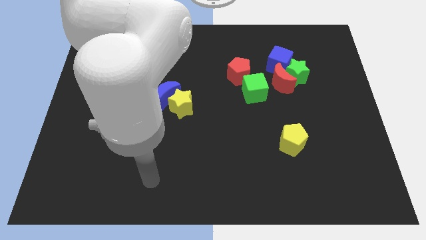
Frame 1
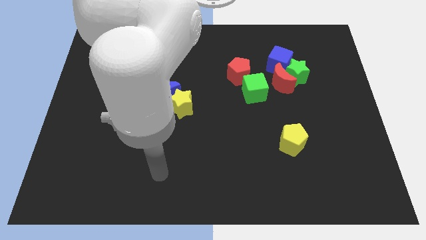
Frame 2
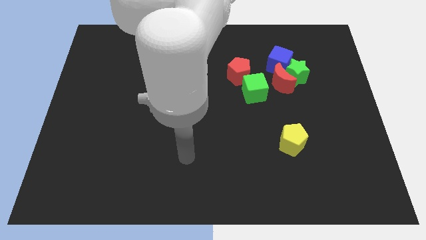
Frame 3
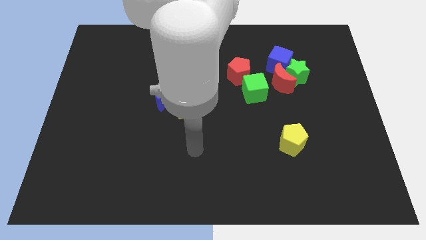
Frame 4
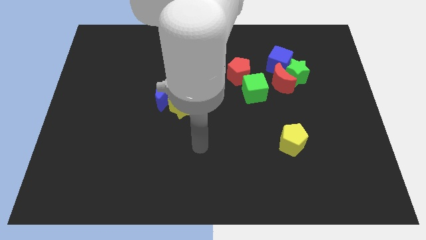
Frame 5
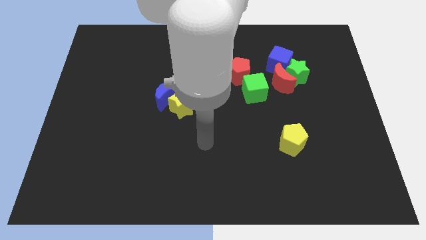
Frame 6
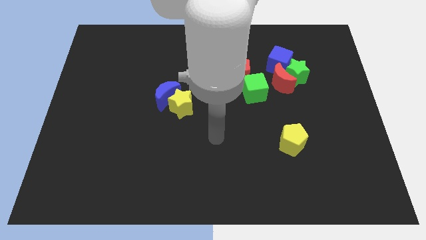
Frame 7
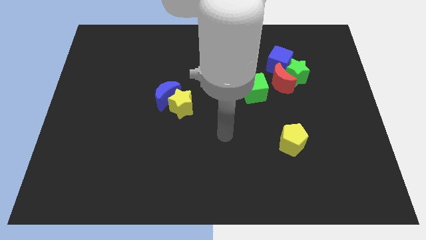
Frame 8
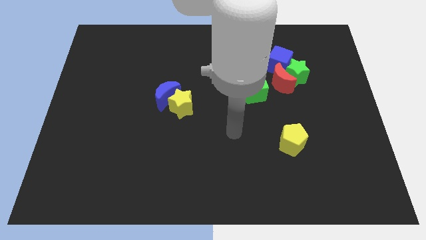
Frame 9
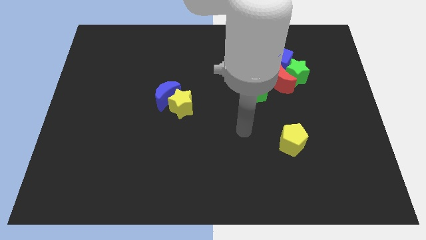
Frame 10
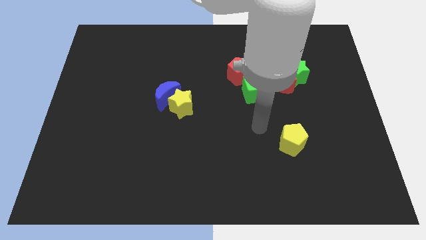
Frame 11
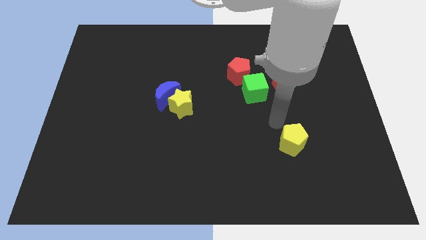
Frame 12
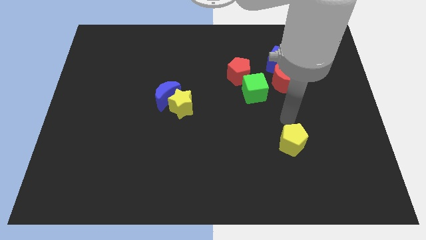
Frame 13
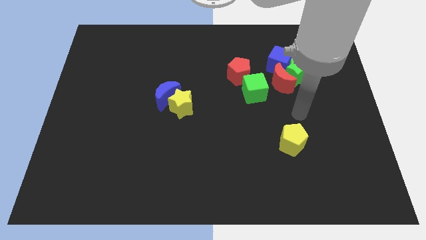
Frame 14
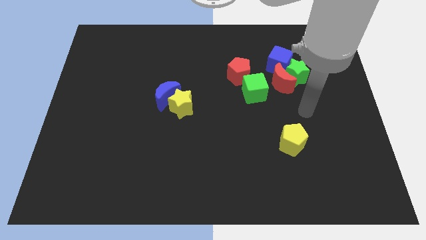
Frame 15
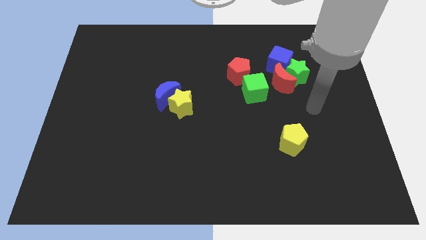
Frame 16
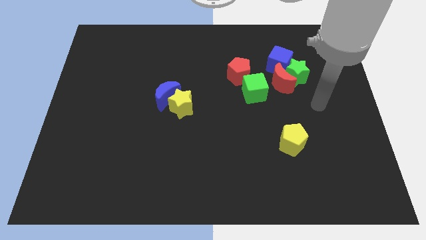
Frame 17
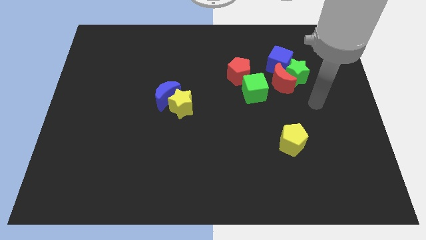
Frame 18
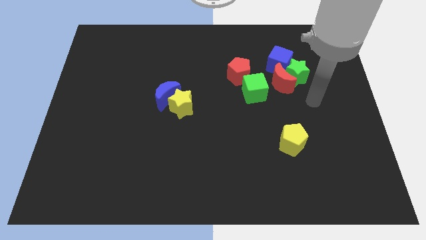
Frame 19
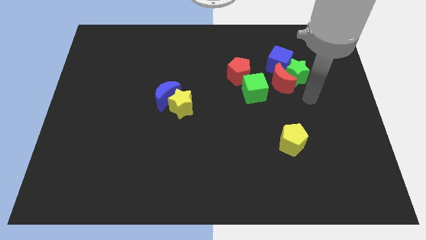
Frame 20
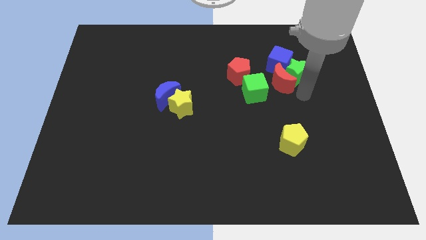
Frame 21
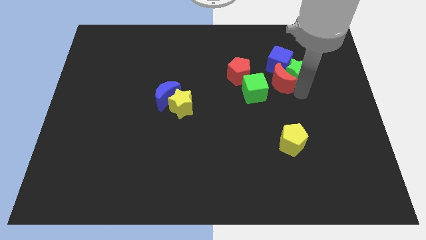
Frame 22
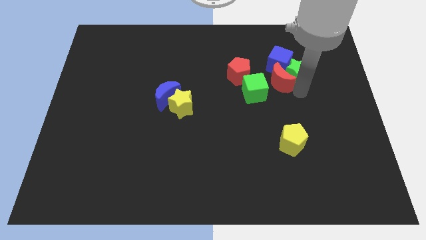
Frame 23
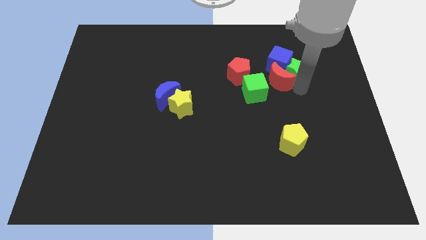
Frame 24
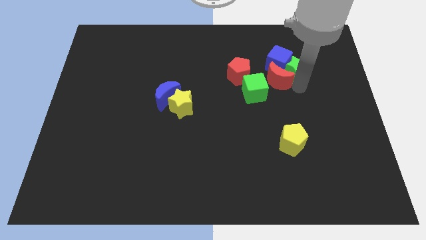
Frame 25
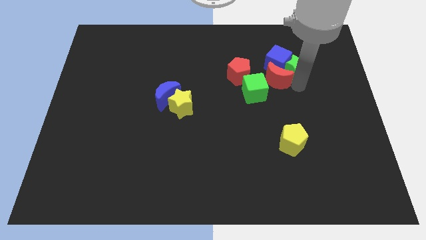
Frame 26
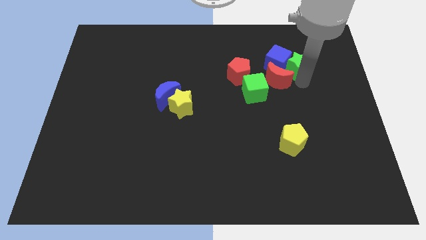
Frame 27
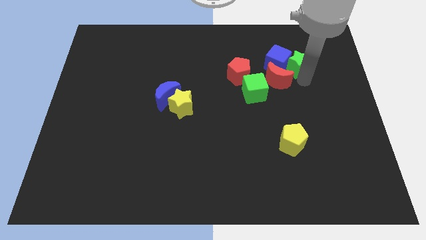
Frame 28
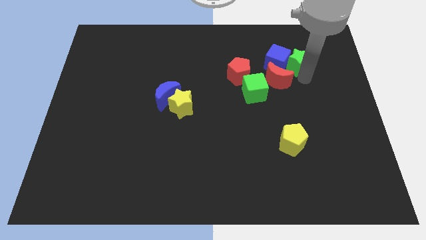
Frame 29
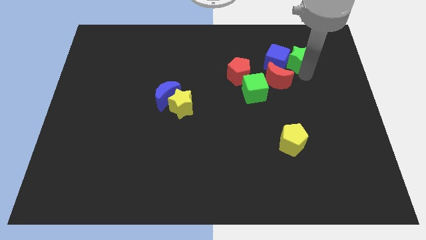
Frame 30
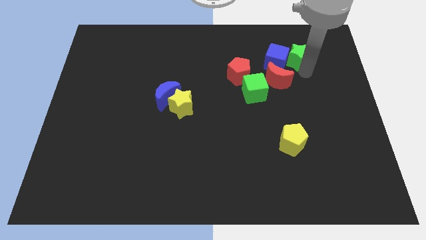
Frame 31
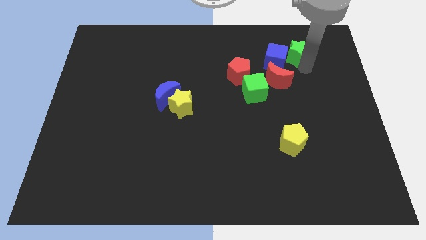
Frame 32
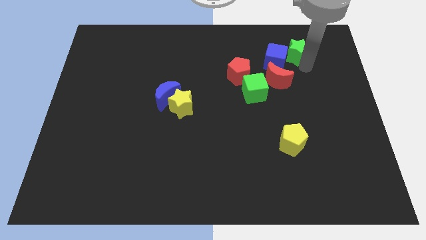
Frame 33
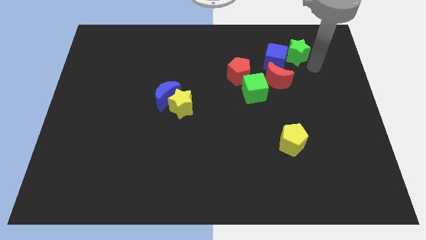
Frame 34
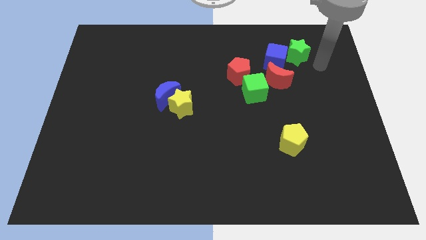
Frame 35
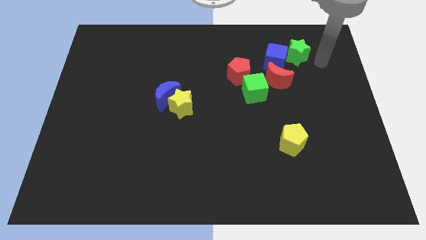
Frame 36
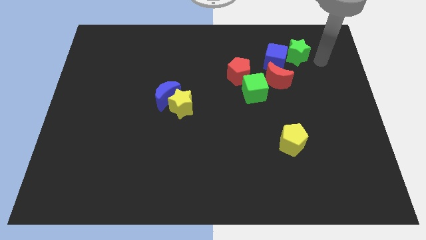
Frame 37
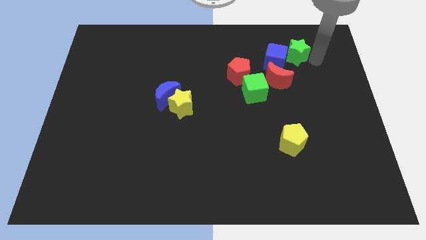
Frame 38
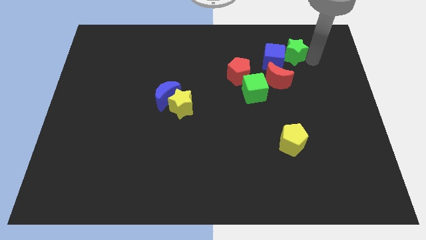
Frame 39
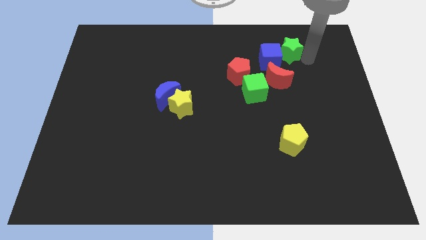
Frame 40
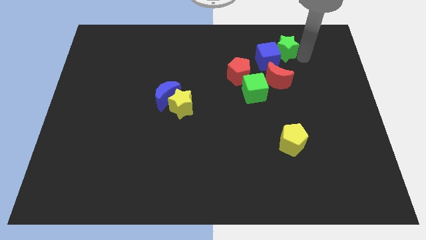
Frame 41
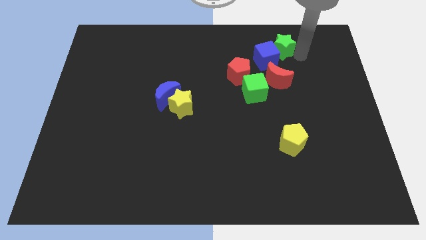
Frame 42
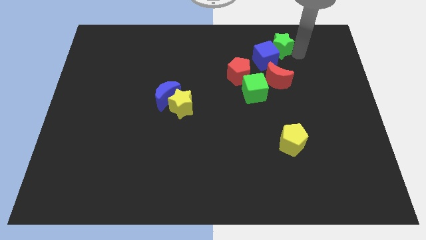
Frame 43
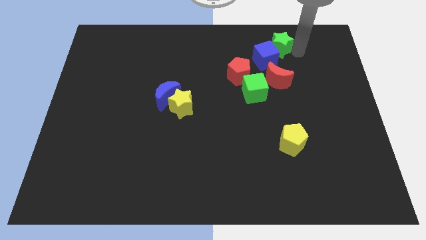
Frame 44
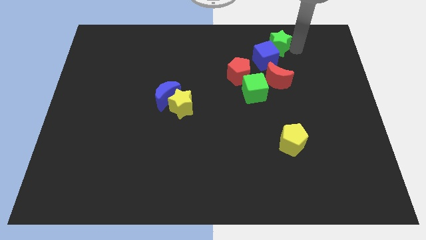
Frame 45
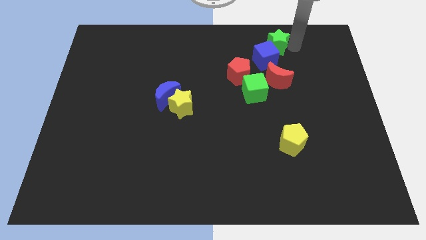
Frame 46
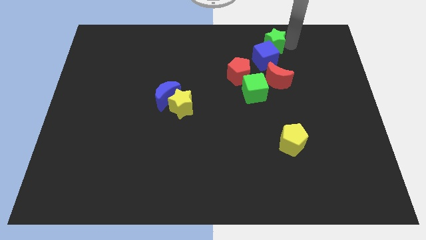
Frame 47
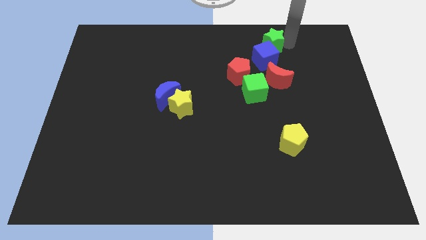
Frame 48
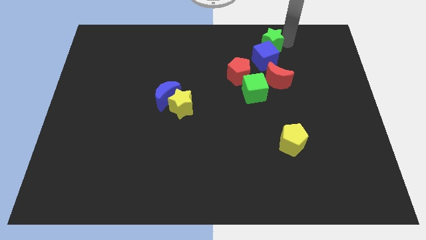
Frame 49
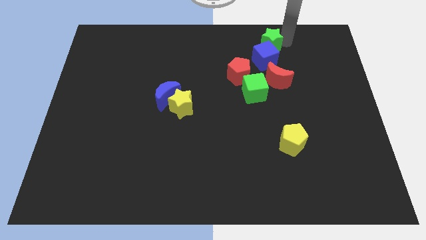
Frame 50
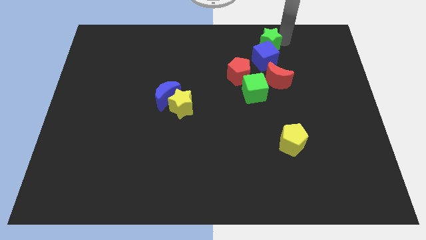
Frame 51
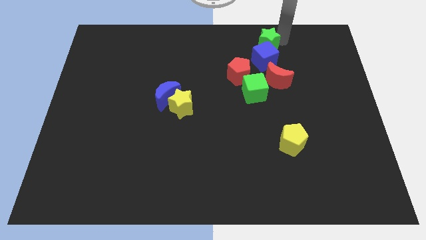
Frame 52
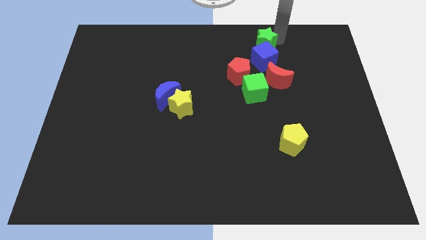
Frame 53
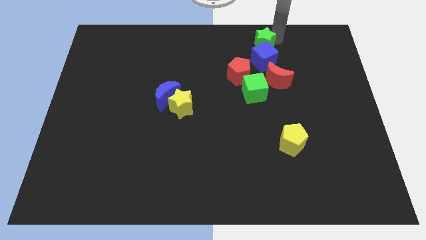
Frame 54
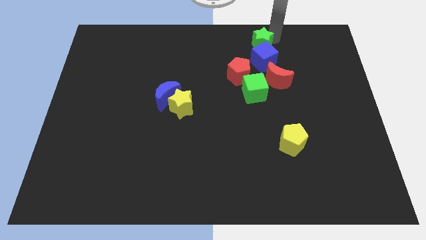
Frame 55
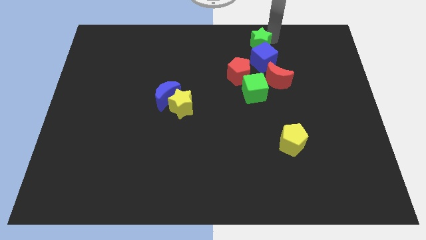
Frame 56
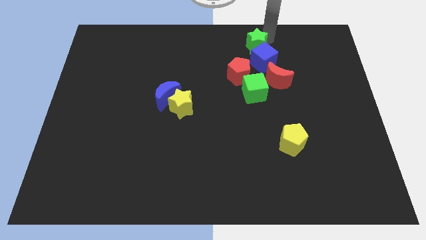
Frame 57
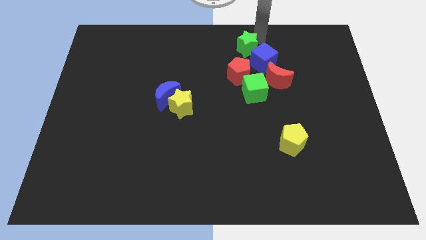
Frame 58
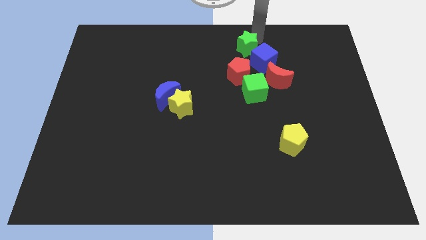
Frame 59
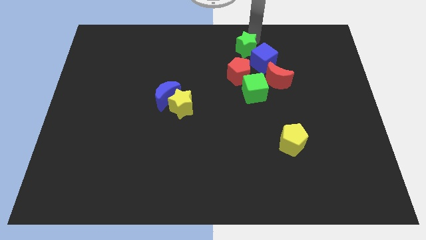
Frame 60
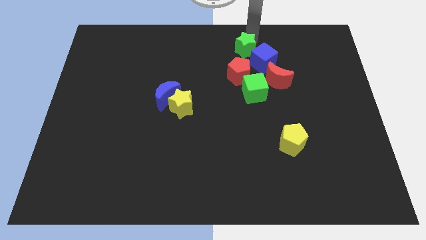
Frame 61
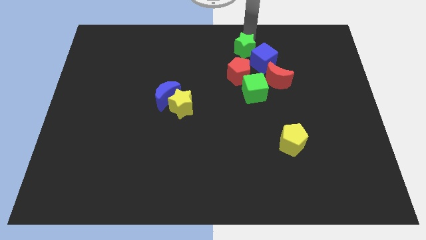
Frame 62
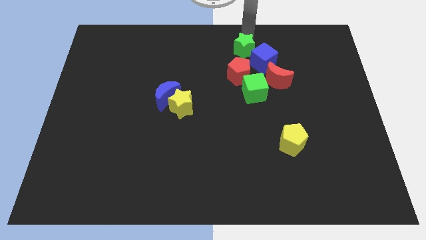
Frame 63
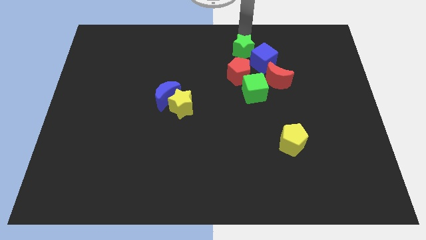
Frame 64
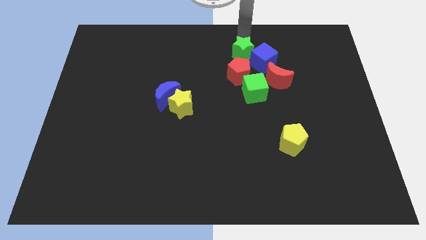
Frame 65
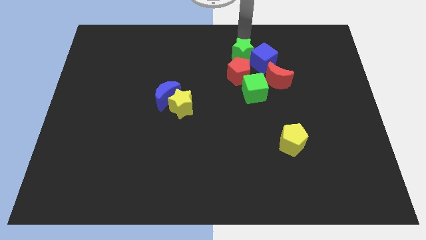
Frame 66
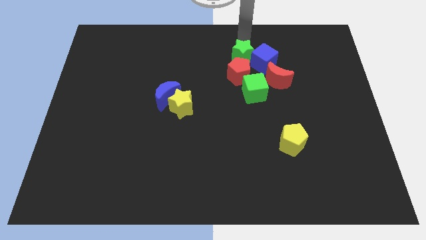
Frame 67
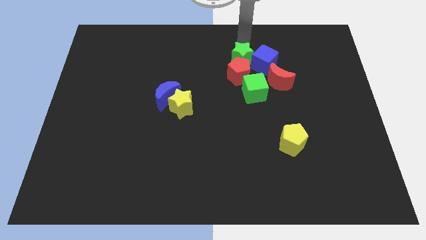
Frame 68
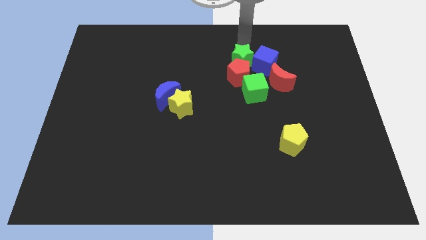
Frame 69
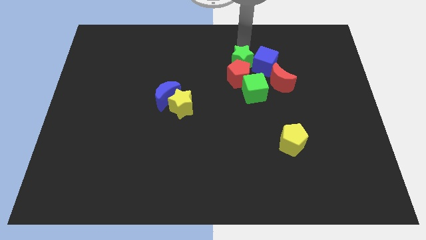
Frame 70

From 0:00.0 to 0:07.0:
slide the green star to the red pentagon

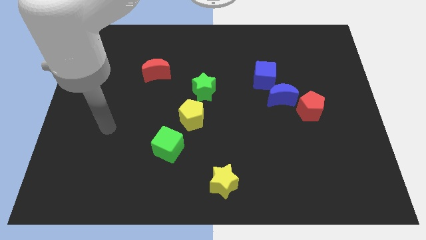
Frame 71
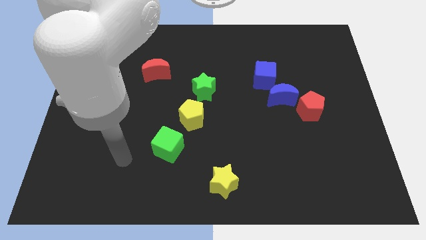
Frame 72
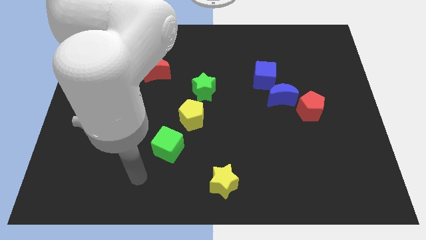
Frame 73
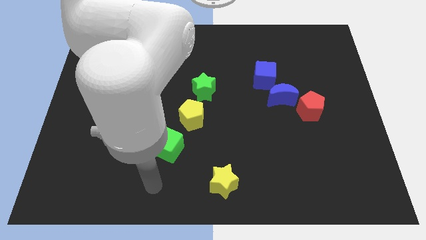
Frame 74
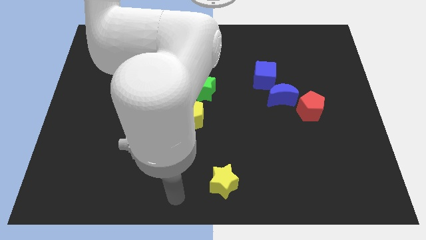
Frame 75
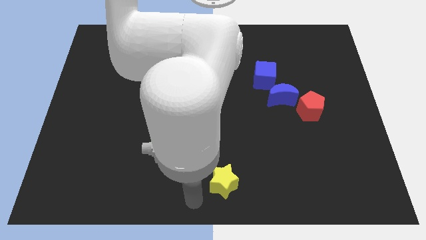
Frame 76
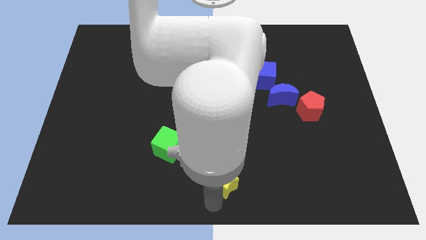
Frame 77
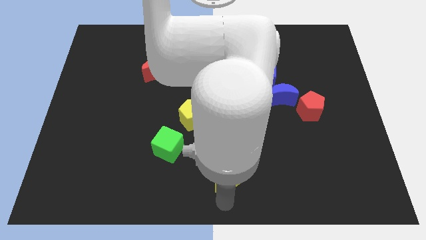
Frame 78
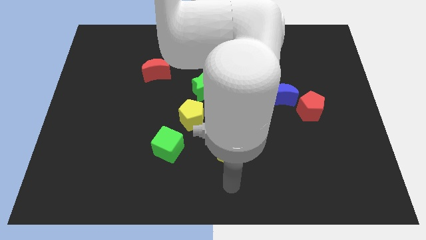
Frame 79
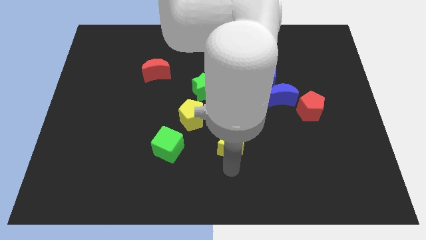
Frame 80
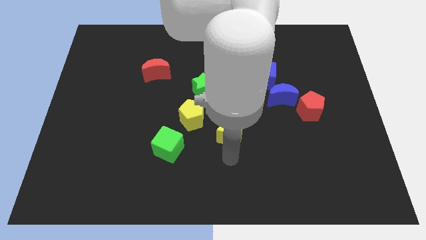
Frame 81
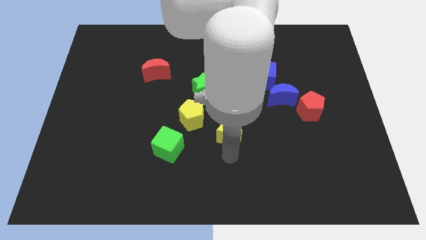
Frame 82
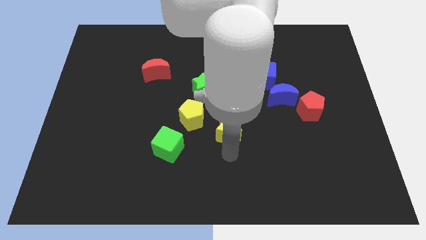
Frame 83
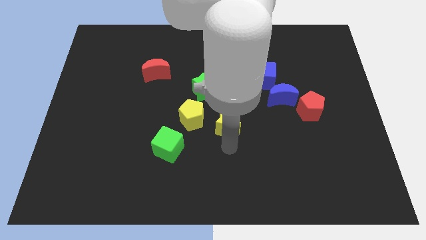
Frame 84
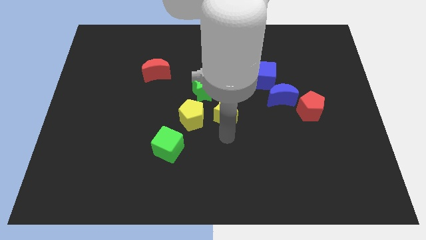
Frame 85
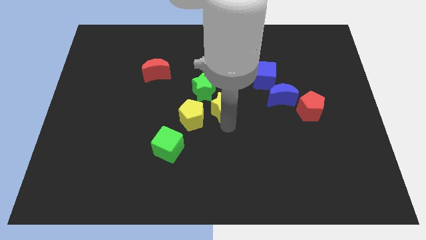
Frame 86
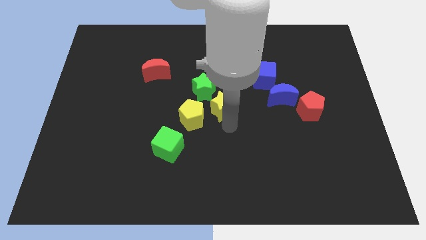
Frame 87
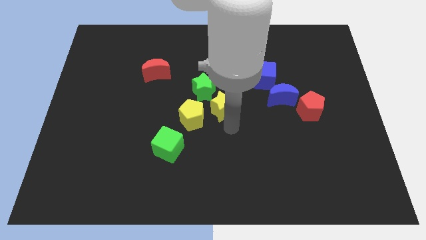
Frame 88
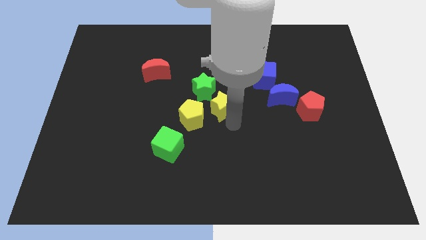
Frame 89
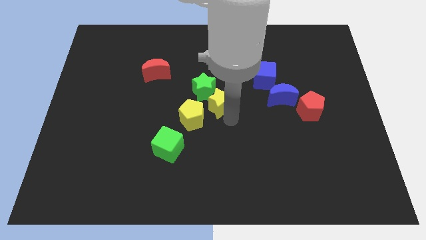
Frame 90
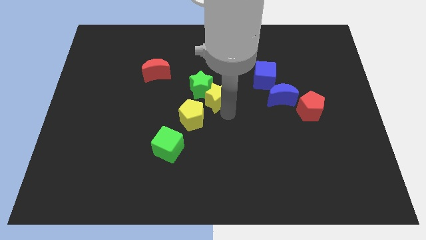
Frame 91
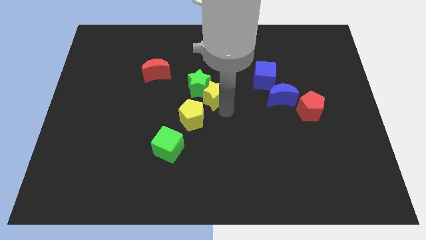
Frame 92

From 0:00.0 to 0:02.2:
push the yellow star next to the green star
